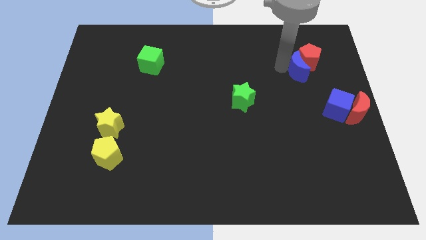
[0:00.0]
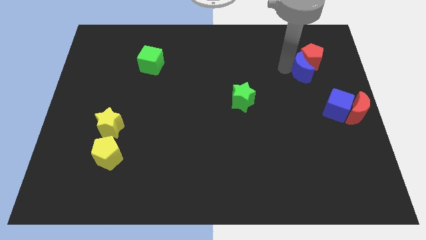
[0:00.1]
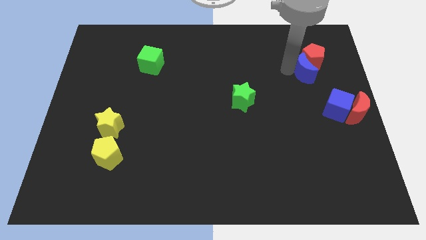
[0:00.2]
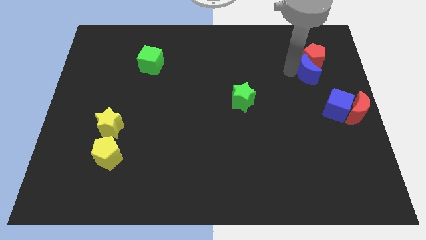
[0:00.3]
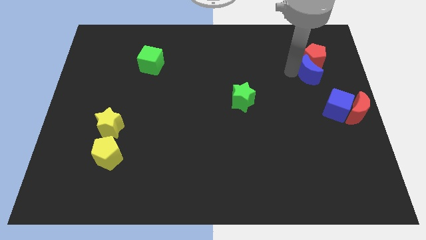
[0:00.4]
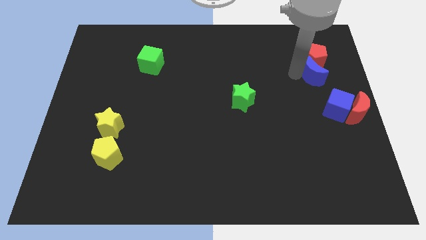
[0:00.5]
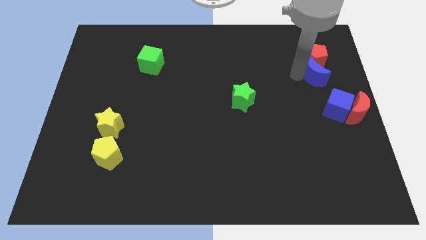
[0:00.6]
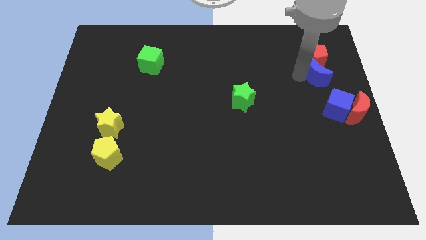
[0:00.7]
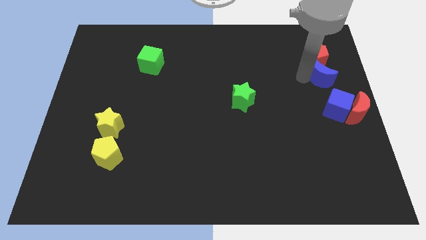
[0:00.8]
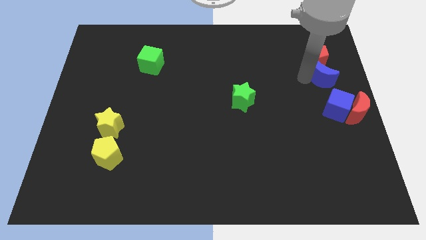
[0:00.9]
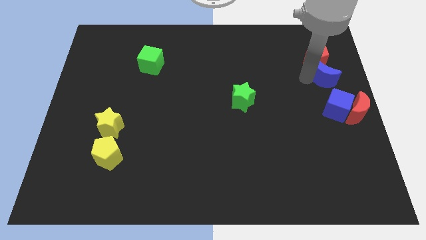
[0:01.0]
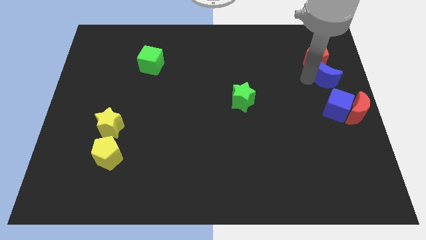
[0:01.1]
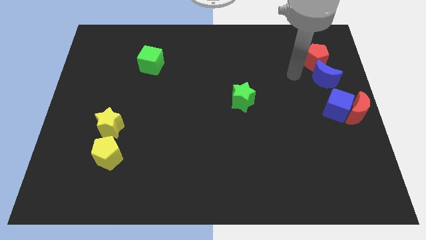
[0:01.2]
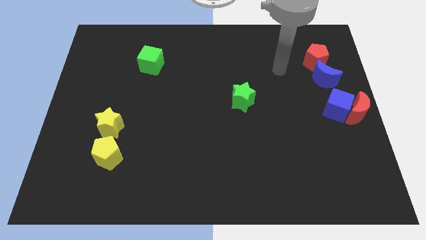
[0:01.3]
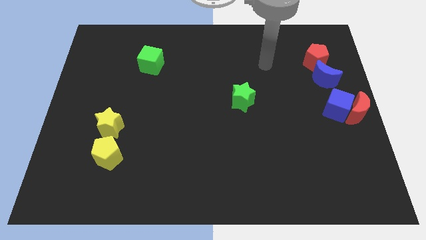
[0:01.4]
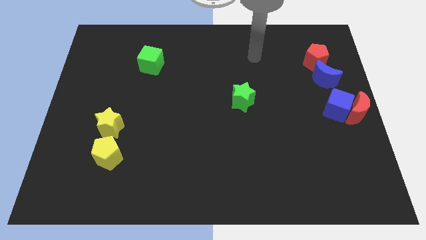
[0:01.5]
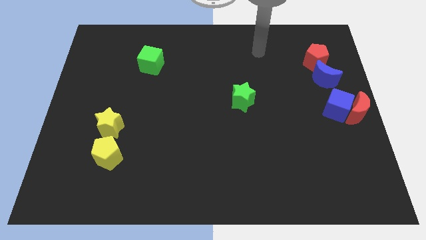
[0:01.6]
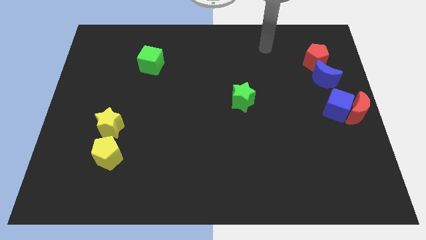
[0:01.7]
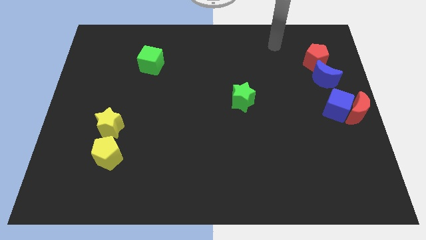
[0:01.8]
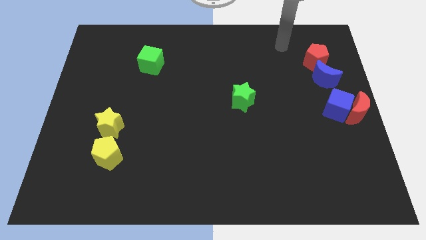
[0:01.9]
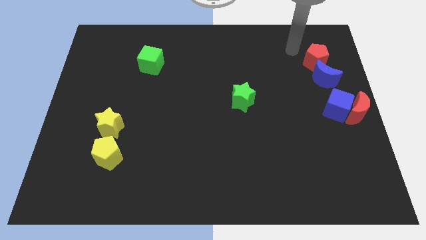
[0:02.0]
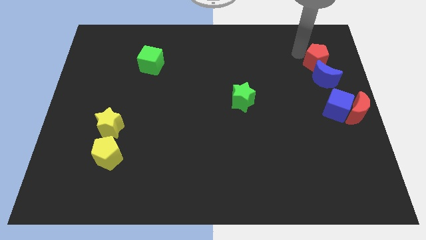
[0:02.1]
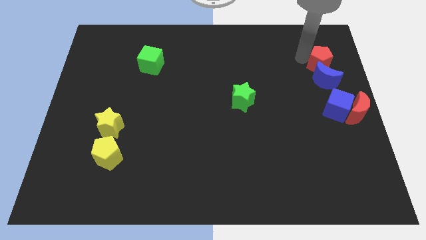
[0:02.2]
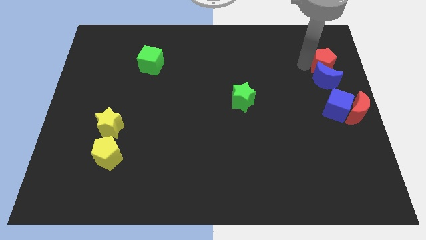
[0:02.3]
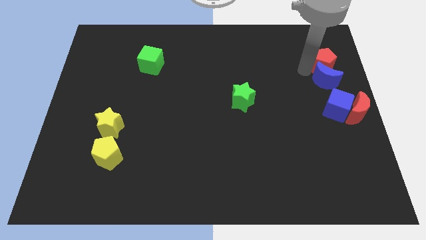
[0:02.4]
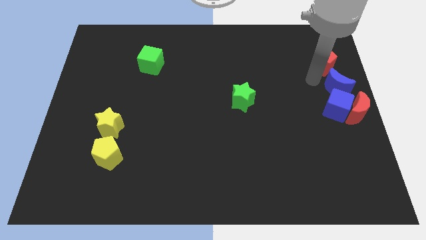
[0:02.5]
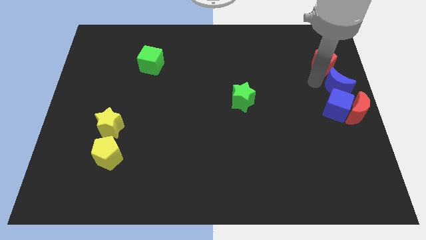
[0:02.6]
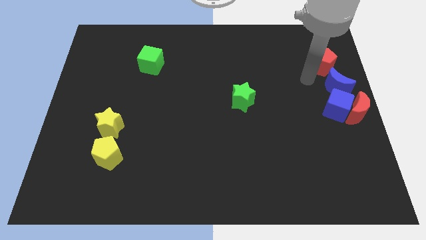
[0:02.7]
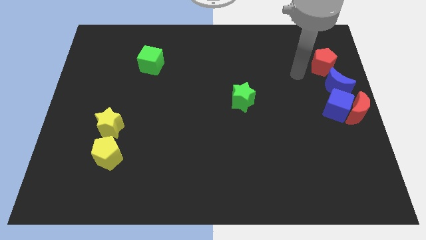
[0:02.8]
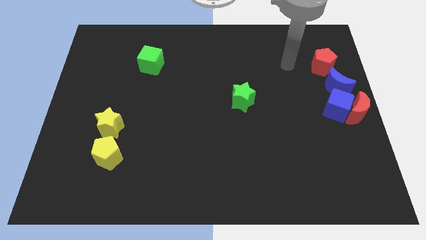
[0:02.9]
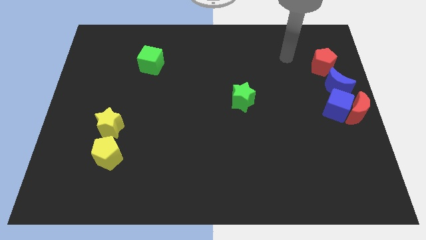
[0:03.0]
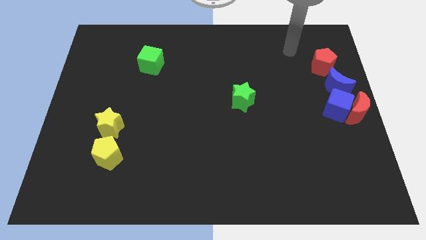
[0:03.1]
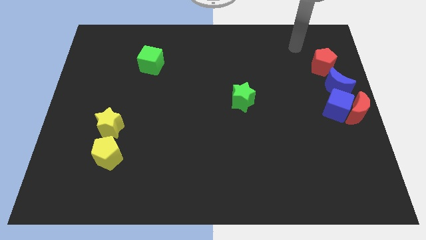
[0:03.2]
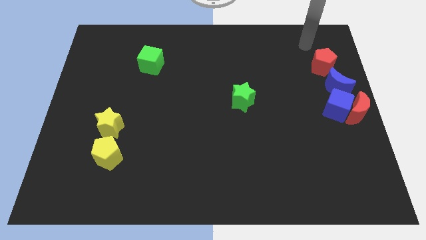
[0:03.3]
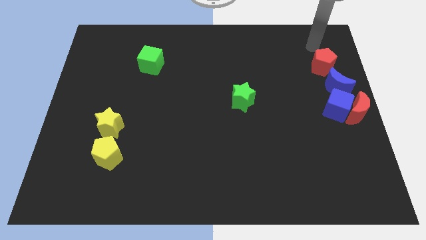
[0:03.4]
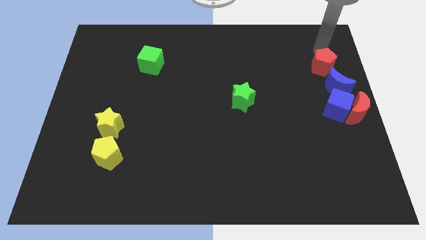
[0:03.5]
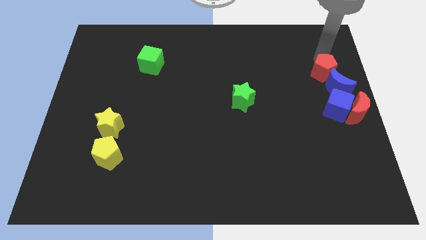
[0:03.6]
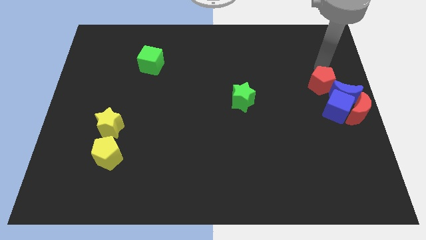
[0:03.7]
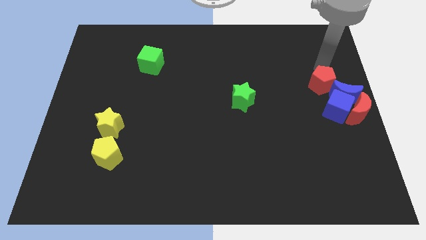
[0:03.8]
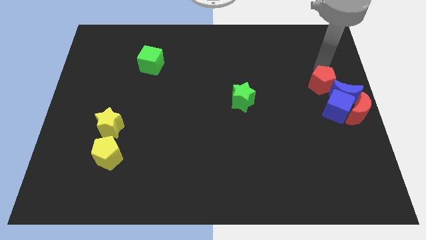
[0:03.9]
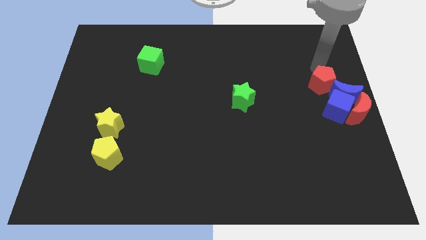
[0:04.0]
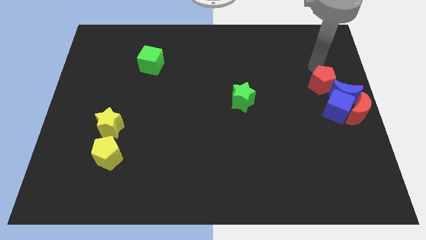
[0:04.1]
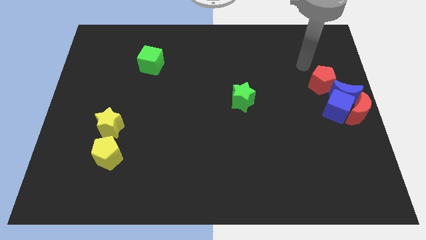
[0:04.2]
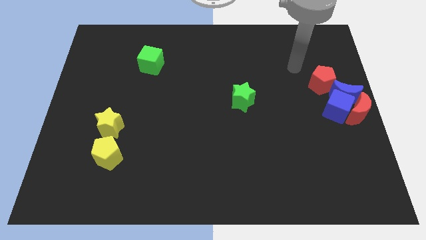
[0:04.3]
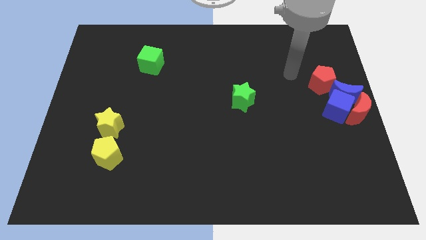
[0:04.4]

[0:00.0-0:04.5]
push the red pentagon and the blue moon into the blue cube

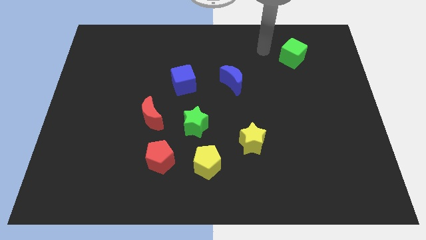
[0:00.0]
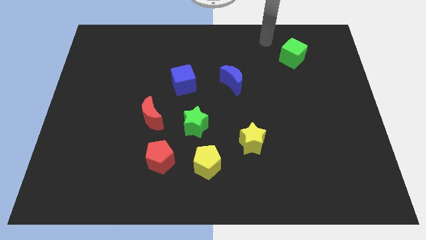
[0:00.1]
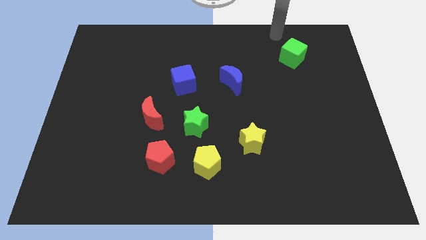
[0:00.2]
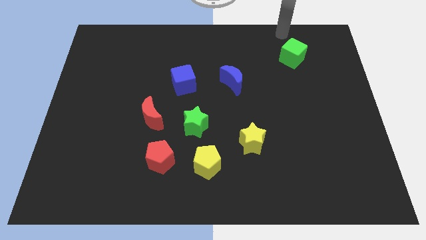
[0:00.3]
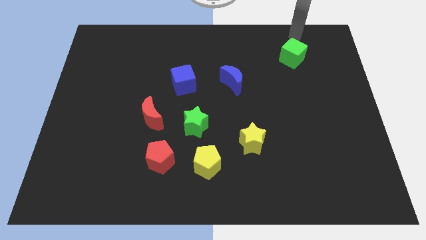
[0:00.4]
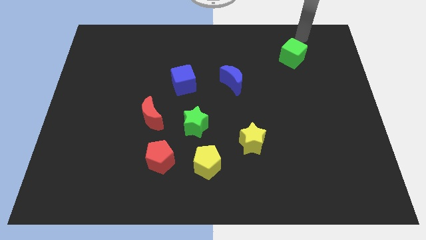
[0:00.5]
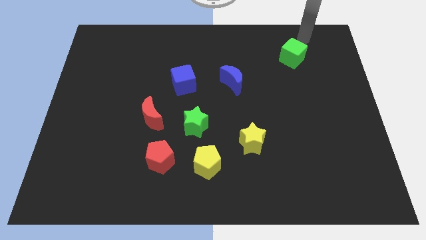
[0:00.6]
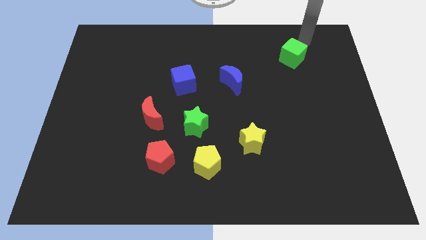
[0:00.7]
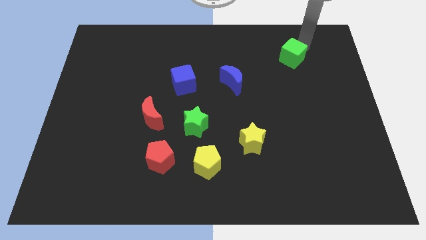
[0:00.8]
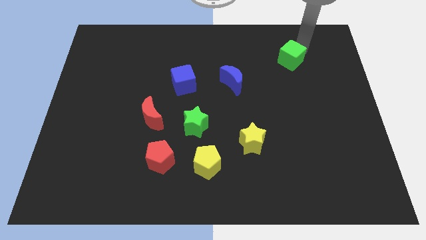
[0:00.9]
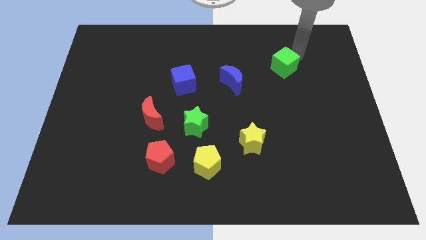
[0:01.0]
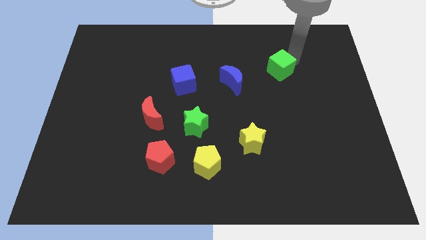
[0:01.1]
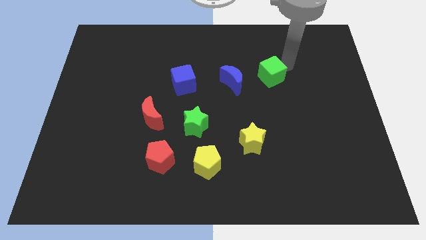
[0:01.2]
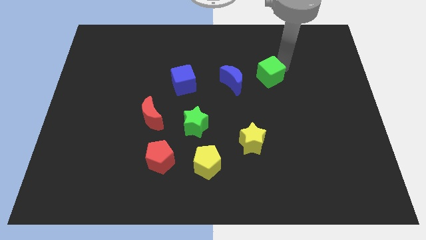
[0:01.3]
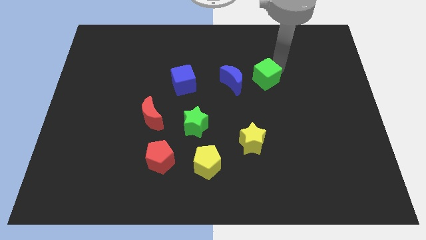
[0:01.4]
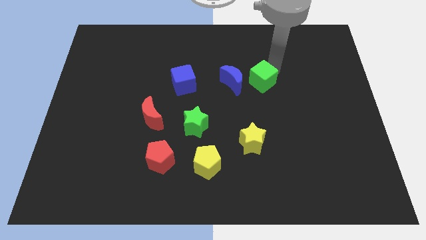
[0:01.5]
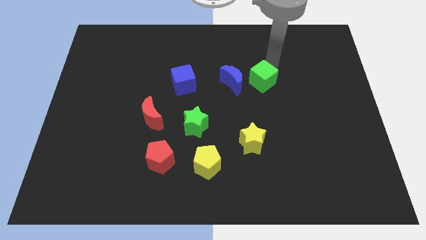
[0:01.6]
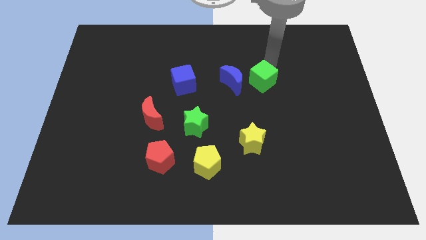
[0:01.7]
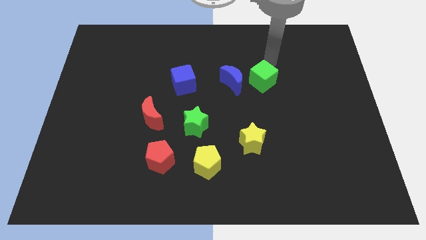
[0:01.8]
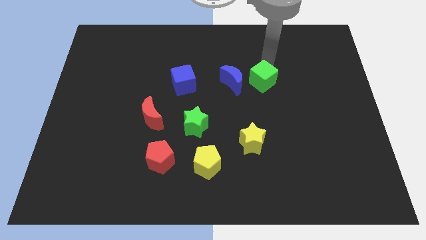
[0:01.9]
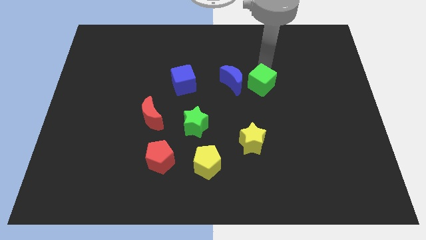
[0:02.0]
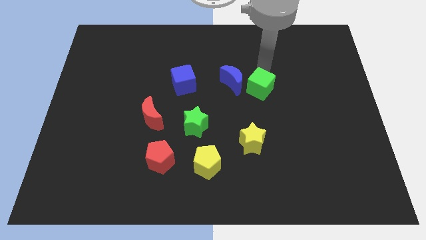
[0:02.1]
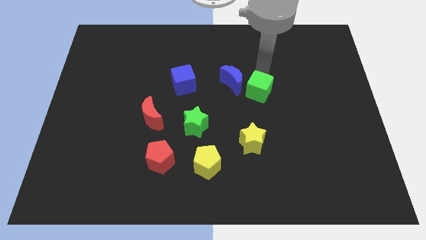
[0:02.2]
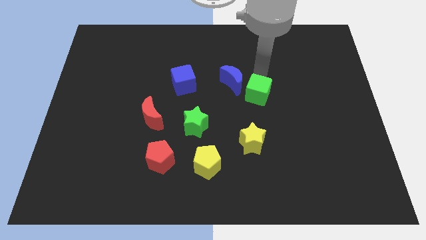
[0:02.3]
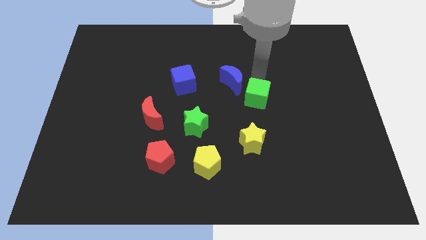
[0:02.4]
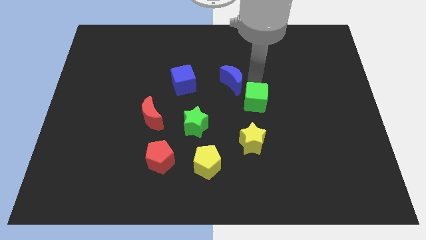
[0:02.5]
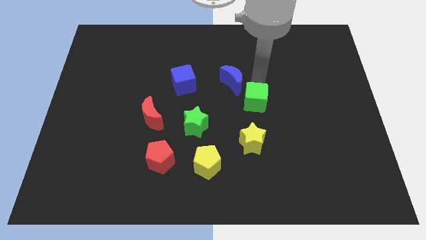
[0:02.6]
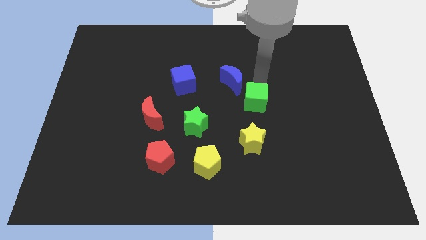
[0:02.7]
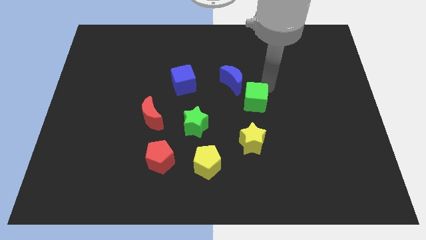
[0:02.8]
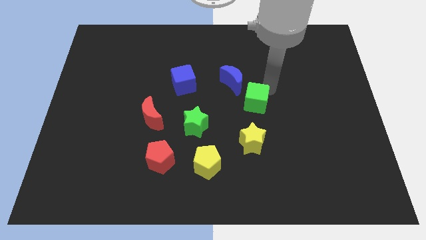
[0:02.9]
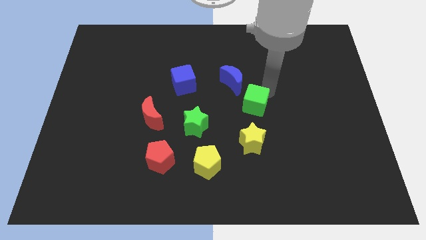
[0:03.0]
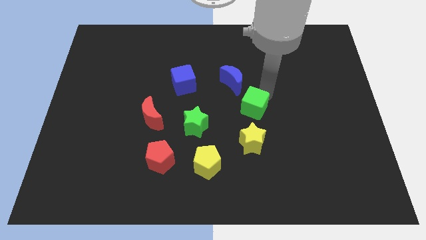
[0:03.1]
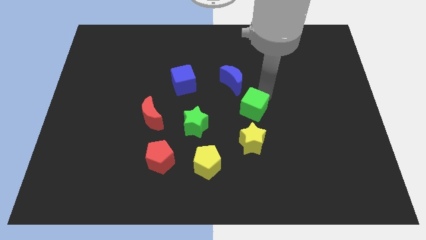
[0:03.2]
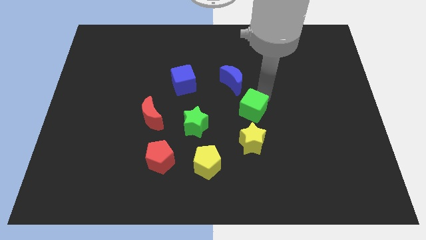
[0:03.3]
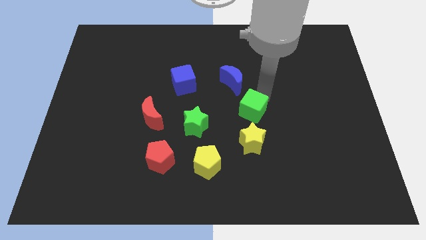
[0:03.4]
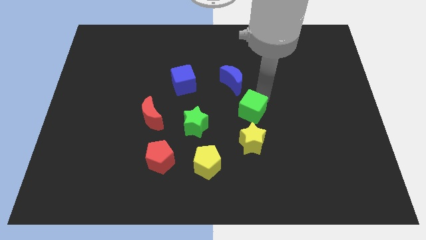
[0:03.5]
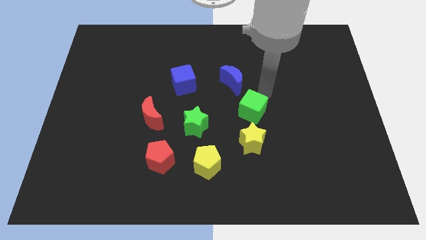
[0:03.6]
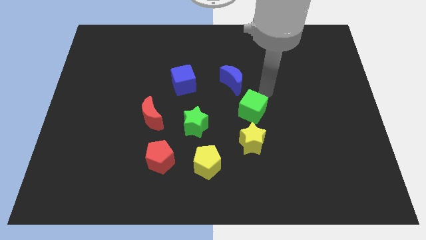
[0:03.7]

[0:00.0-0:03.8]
place the green cube above the yellow star

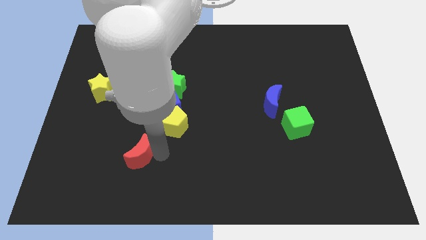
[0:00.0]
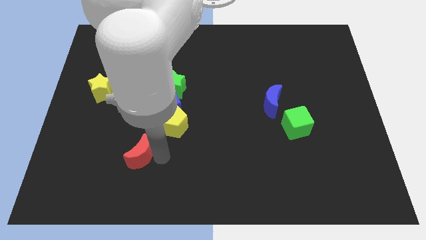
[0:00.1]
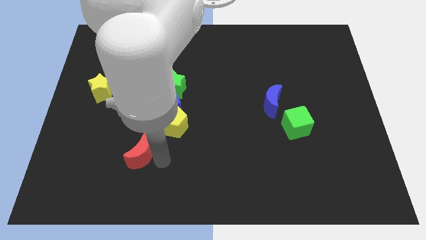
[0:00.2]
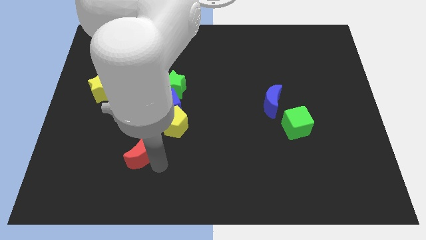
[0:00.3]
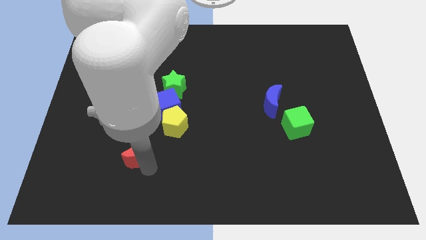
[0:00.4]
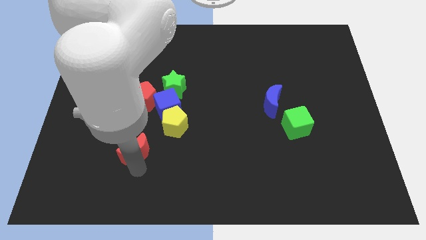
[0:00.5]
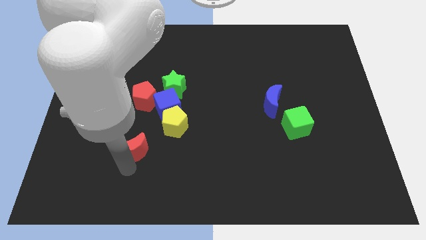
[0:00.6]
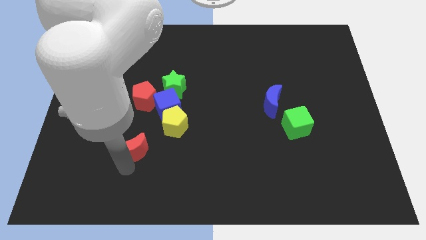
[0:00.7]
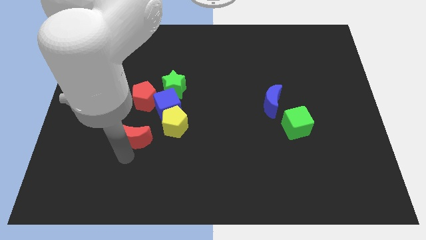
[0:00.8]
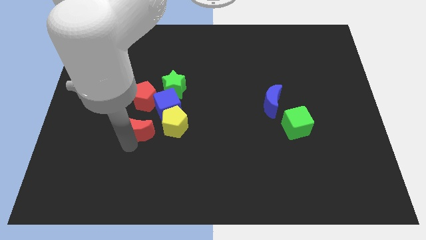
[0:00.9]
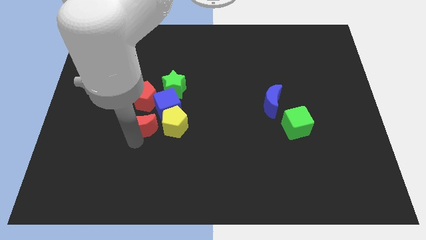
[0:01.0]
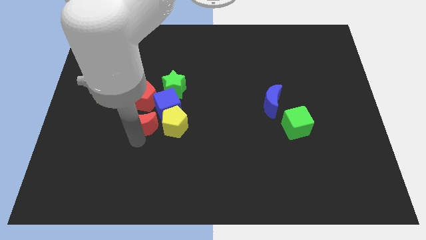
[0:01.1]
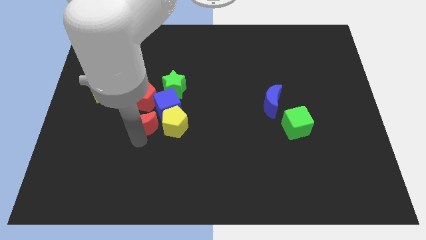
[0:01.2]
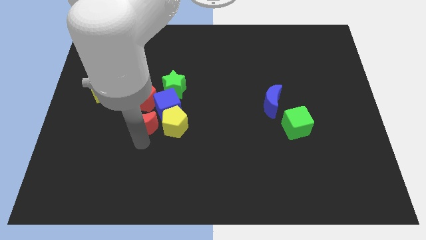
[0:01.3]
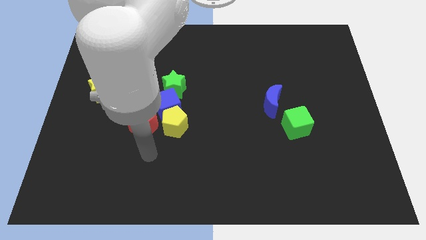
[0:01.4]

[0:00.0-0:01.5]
push the red crescent to the bottom of the red pentagon
